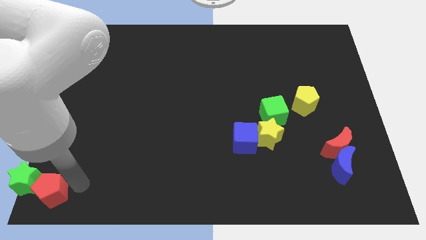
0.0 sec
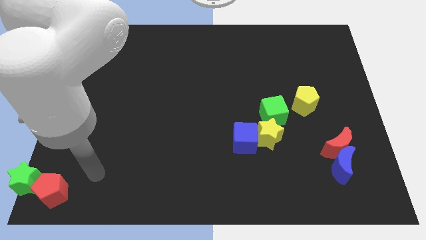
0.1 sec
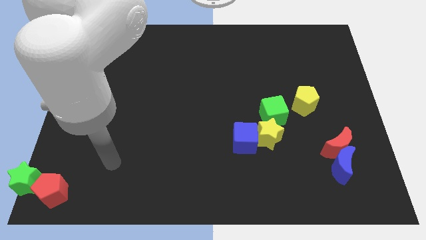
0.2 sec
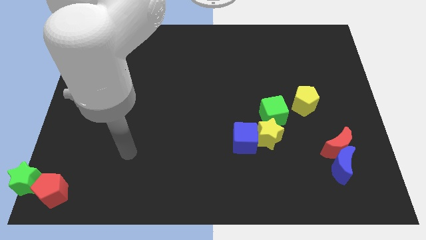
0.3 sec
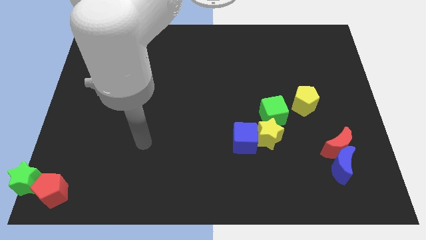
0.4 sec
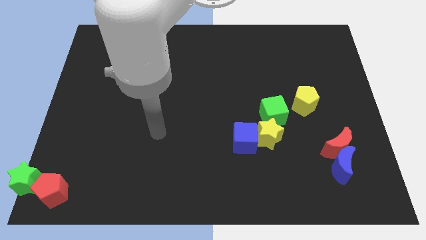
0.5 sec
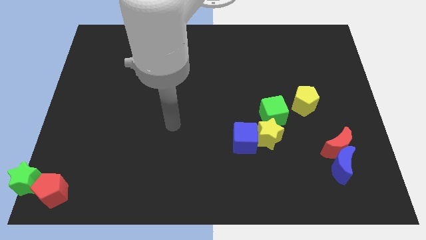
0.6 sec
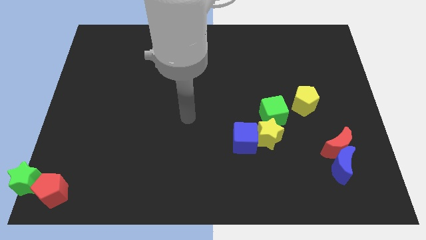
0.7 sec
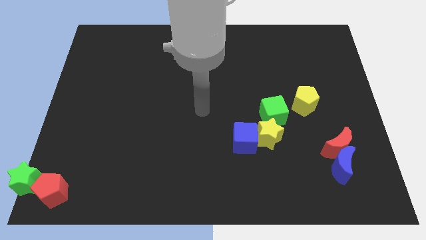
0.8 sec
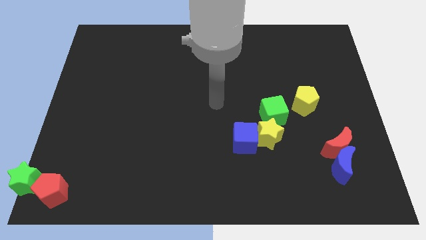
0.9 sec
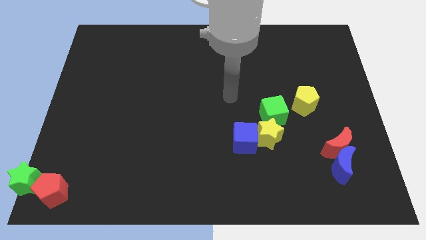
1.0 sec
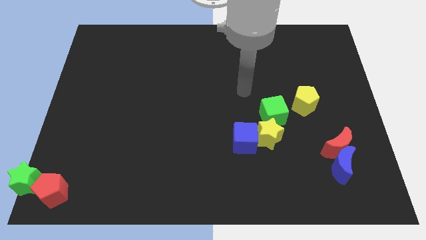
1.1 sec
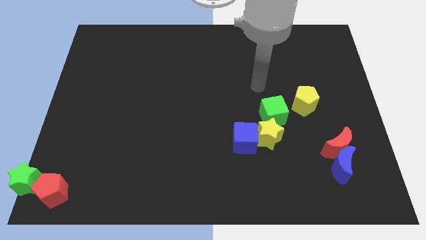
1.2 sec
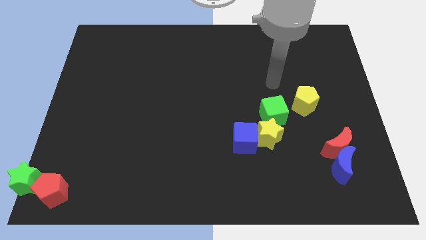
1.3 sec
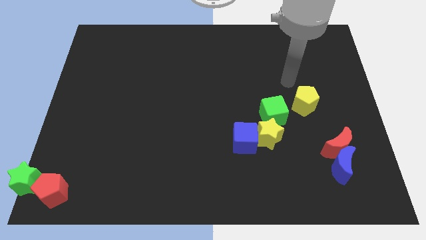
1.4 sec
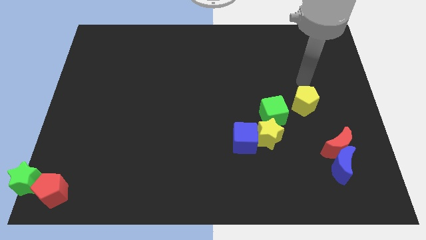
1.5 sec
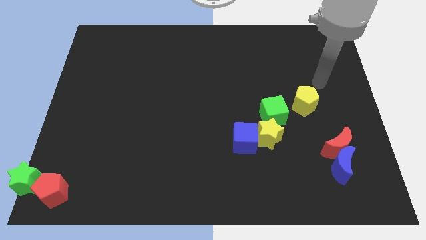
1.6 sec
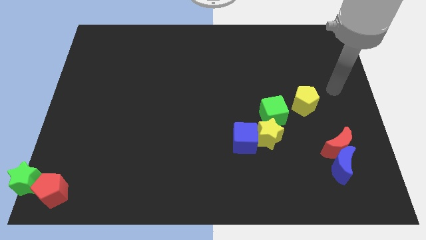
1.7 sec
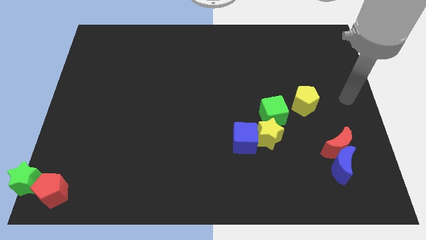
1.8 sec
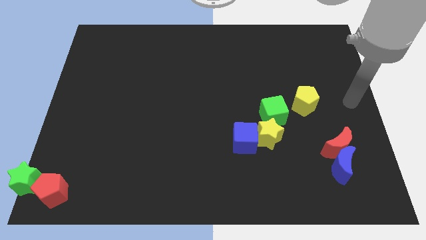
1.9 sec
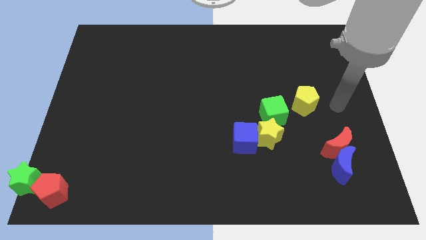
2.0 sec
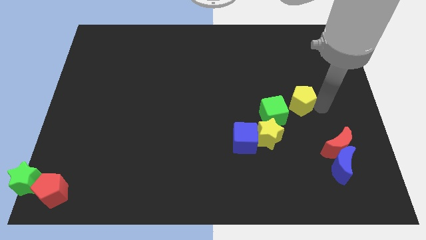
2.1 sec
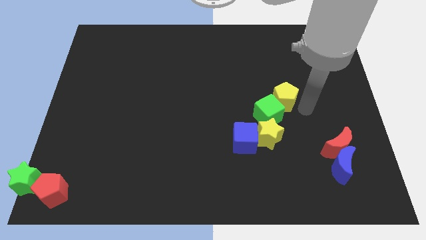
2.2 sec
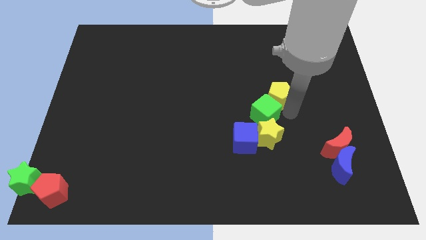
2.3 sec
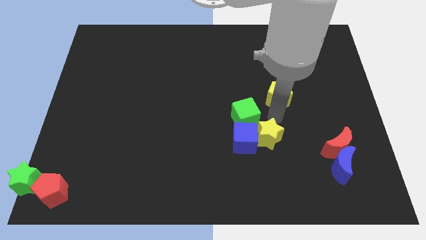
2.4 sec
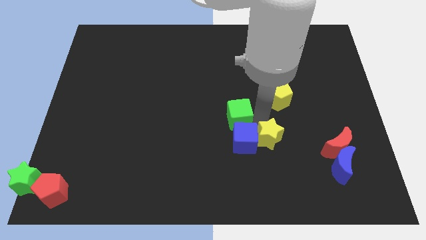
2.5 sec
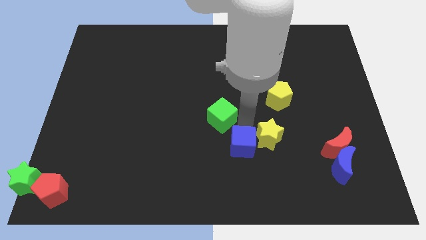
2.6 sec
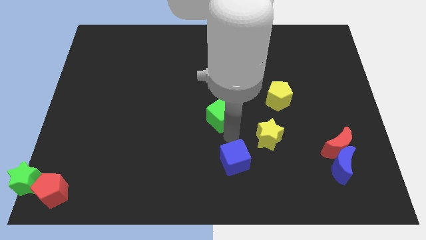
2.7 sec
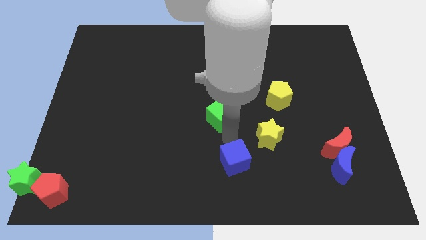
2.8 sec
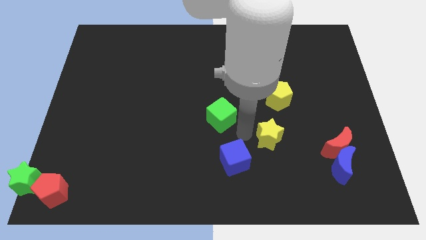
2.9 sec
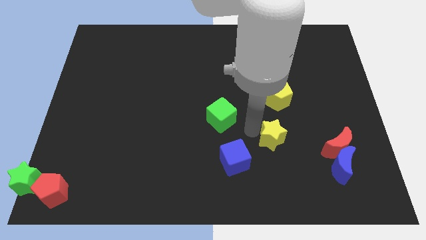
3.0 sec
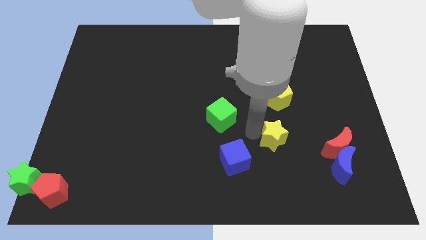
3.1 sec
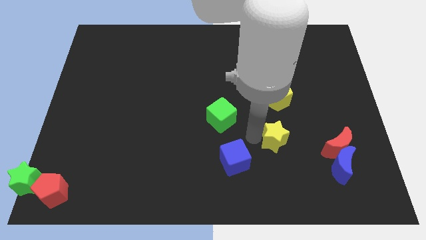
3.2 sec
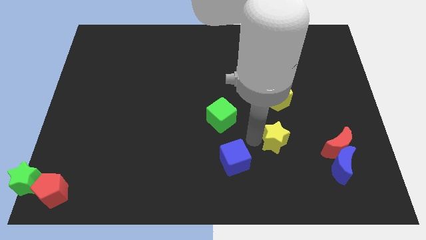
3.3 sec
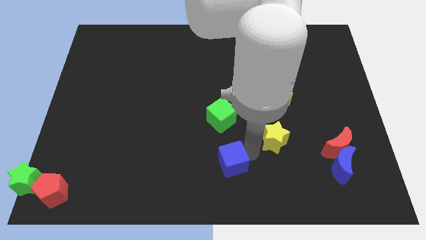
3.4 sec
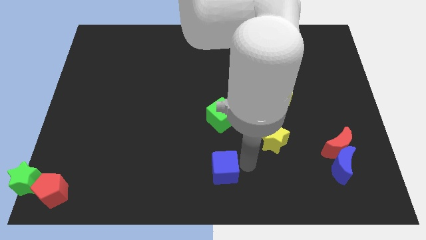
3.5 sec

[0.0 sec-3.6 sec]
separate the blue cube from the green cube and yellow star

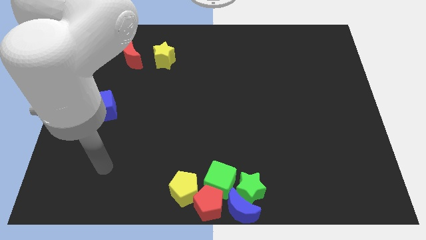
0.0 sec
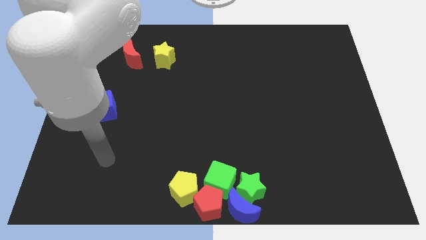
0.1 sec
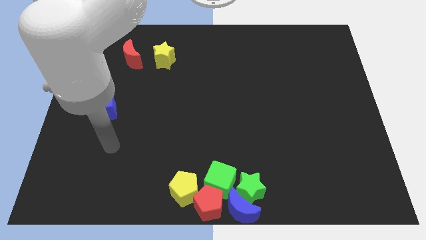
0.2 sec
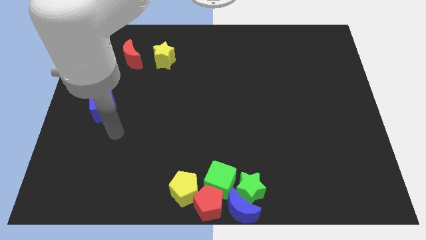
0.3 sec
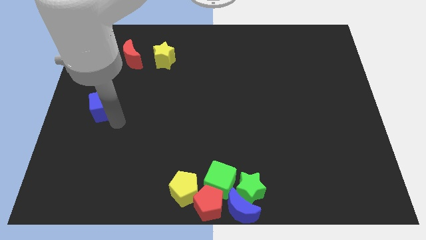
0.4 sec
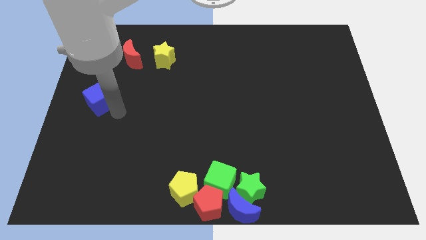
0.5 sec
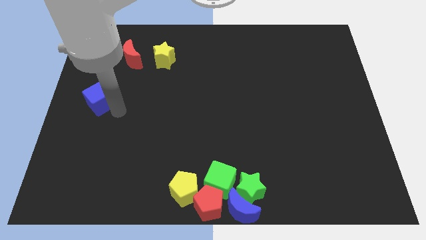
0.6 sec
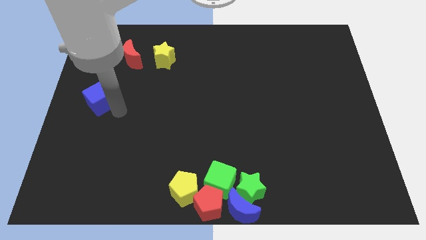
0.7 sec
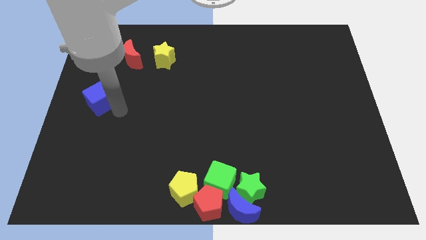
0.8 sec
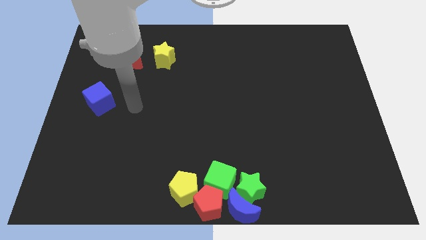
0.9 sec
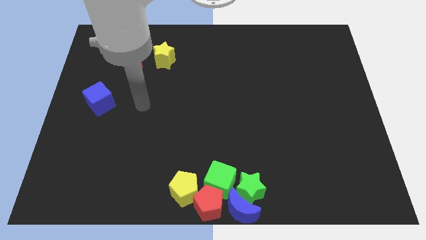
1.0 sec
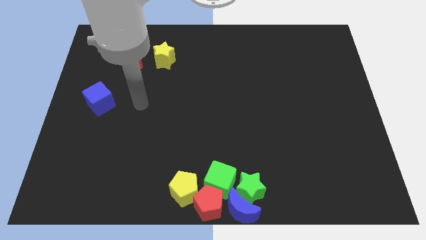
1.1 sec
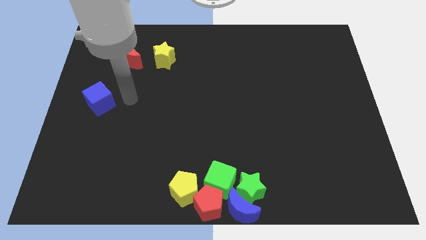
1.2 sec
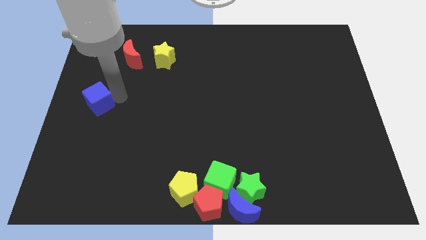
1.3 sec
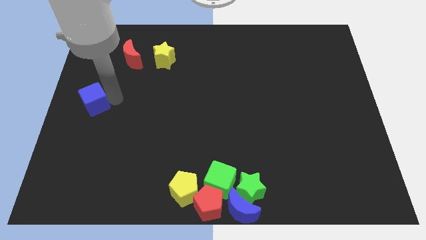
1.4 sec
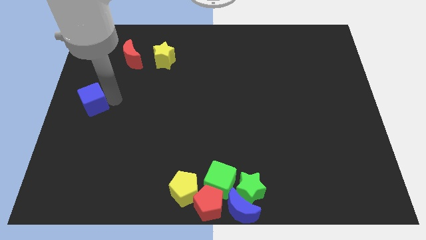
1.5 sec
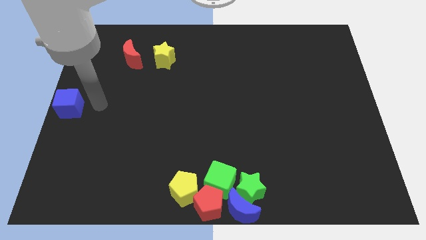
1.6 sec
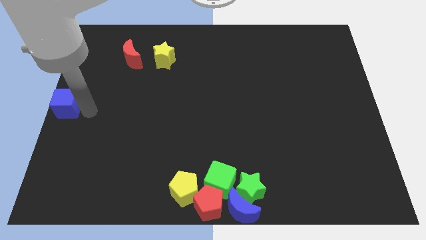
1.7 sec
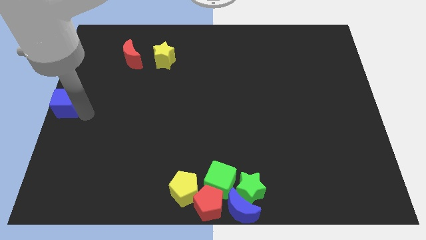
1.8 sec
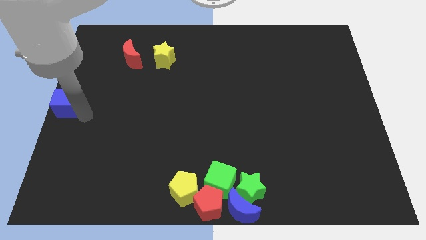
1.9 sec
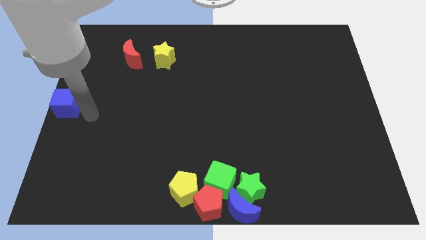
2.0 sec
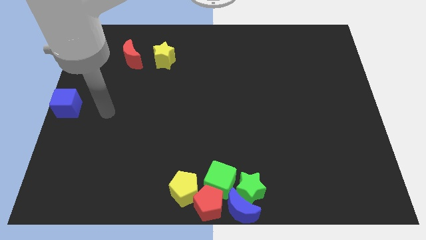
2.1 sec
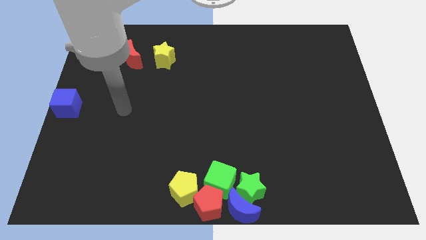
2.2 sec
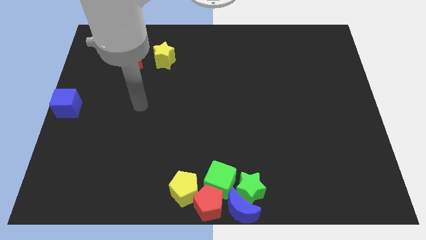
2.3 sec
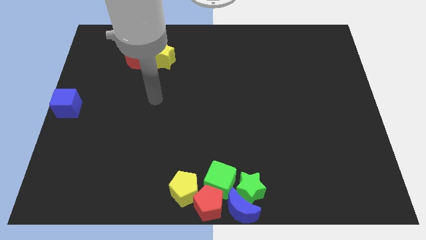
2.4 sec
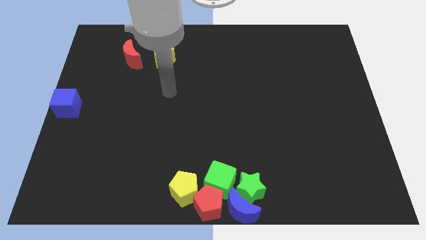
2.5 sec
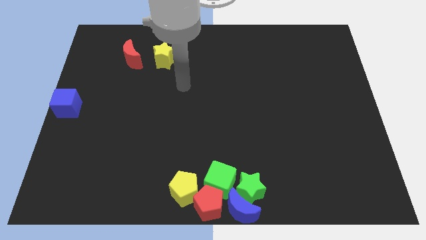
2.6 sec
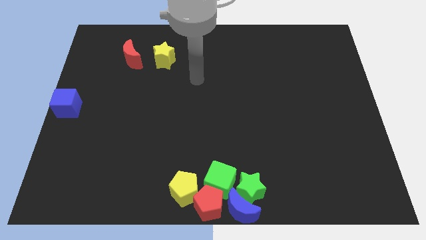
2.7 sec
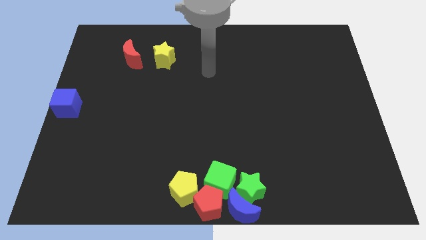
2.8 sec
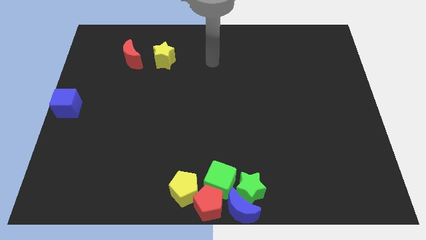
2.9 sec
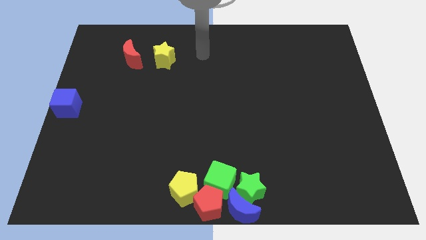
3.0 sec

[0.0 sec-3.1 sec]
place the blue cube at the center left

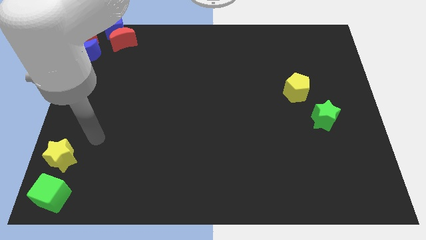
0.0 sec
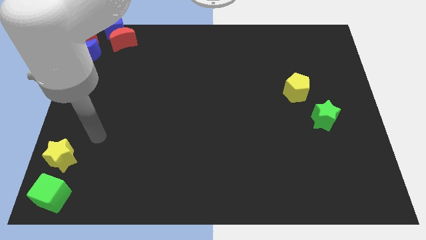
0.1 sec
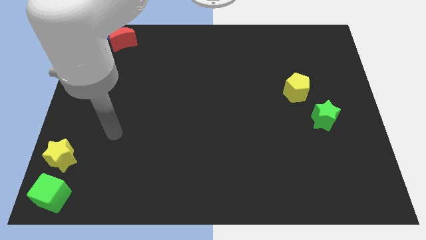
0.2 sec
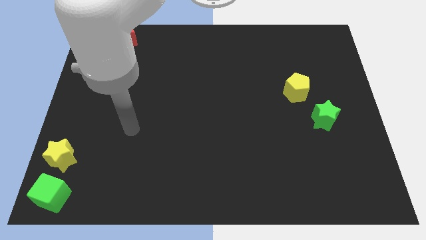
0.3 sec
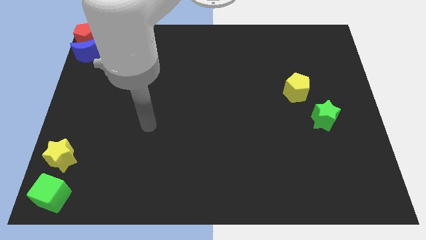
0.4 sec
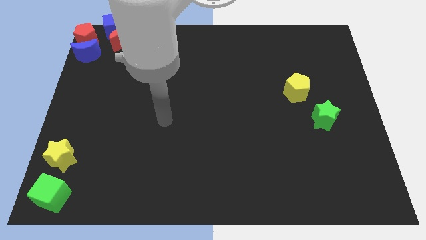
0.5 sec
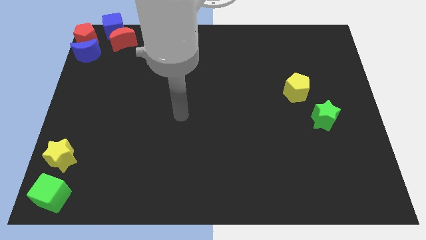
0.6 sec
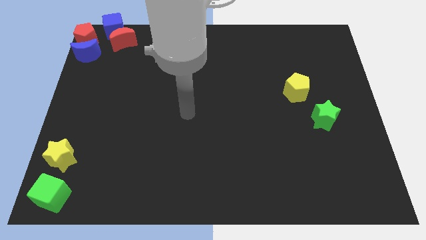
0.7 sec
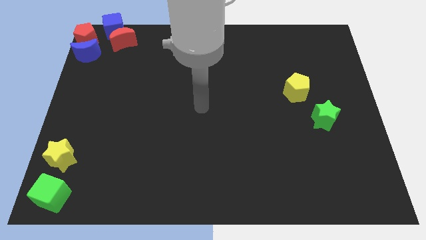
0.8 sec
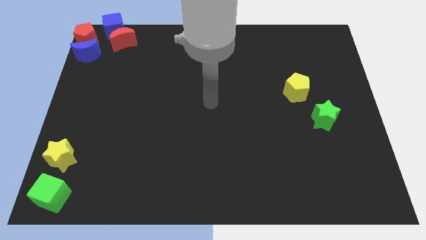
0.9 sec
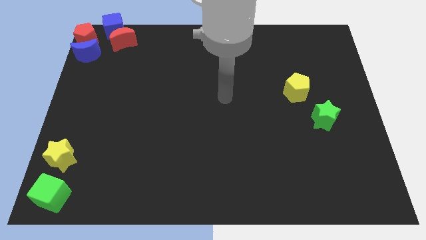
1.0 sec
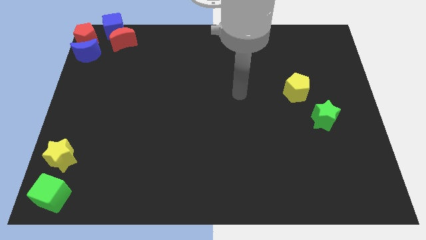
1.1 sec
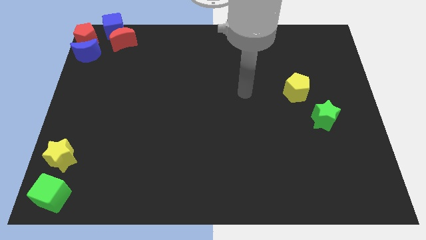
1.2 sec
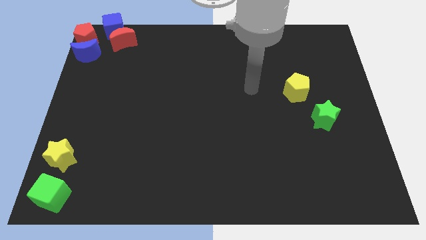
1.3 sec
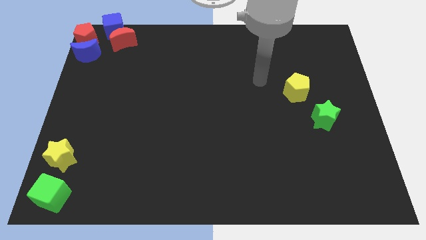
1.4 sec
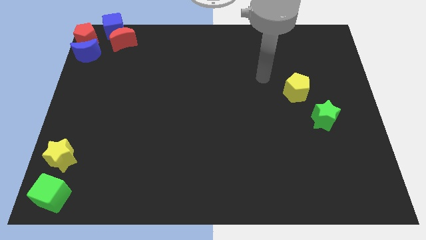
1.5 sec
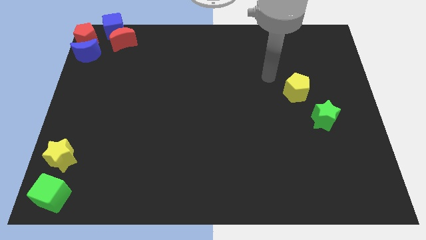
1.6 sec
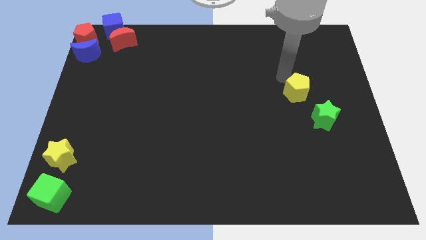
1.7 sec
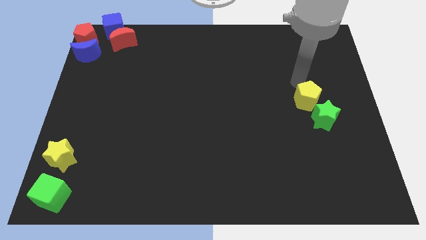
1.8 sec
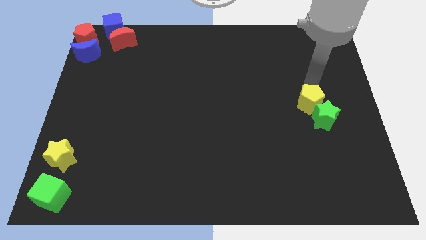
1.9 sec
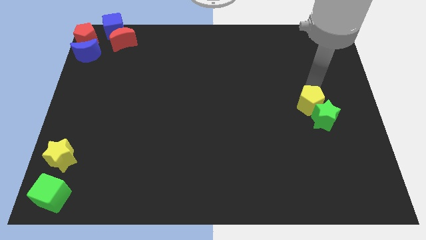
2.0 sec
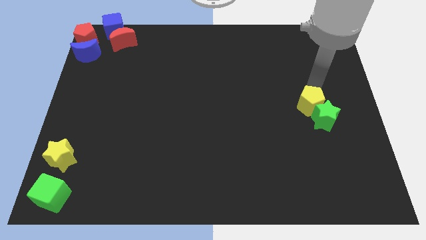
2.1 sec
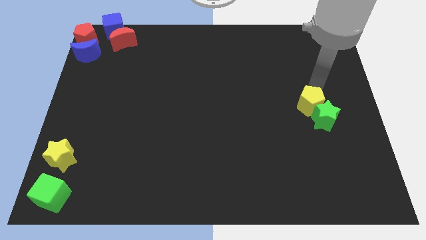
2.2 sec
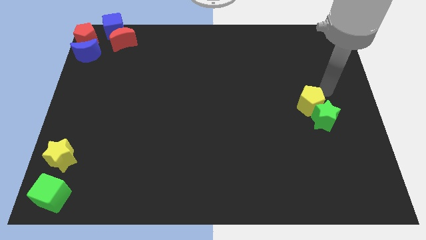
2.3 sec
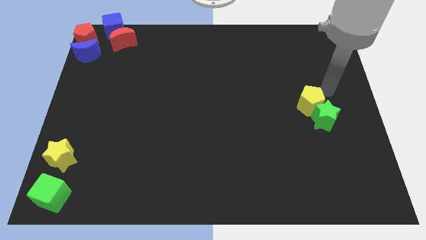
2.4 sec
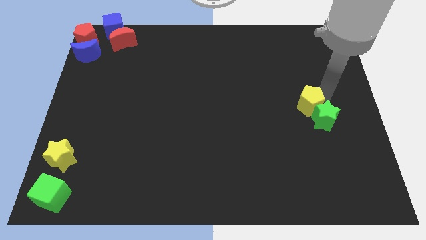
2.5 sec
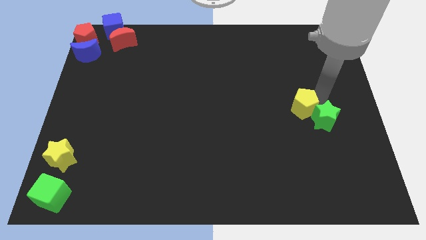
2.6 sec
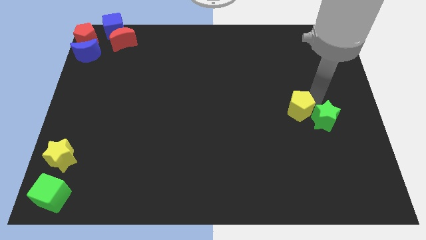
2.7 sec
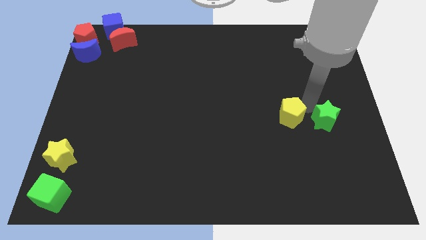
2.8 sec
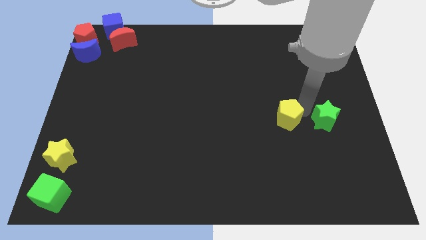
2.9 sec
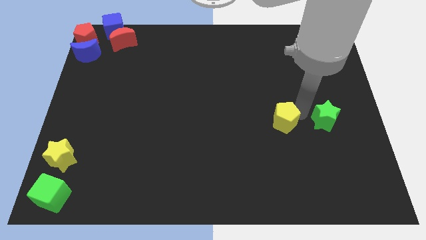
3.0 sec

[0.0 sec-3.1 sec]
slide the yellow pentagon to the left side of the green star
